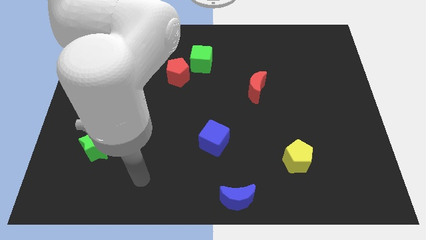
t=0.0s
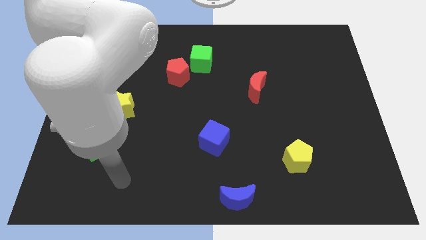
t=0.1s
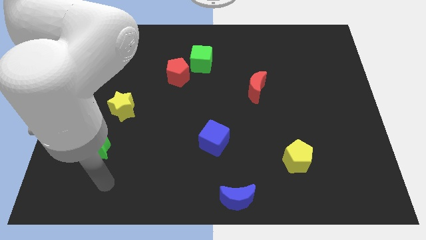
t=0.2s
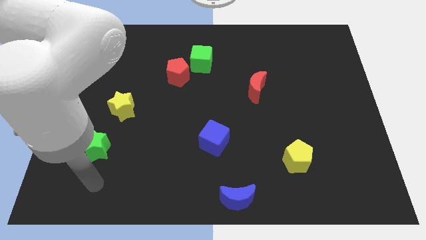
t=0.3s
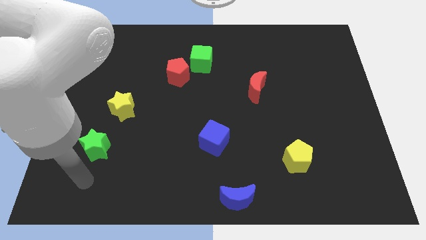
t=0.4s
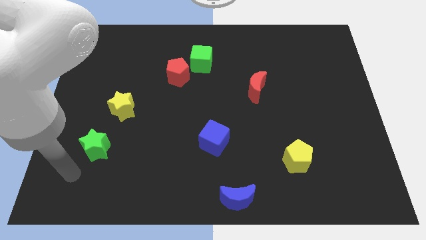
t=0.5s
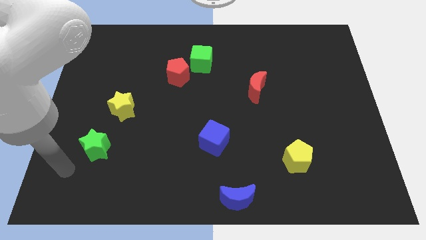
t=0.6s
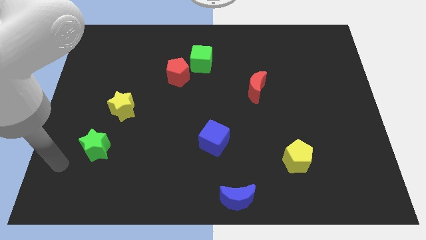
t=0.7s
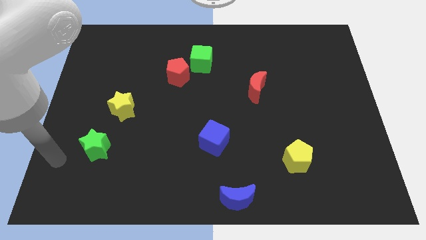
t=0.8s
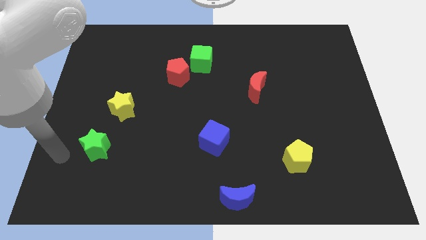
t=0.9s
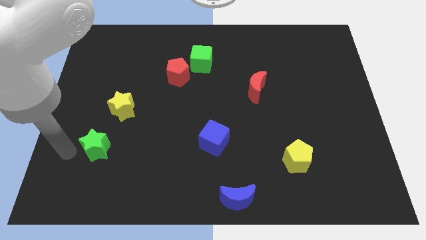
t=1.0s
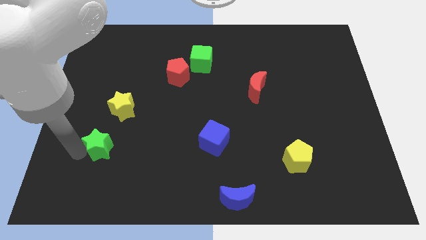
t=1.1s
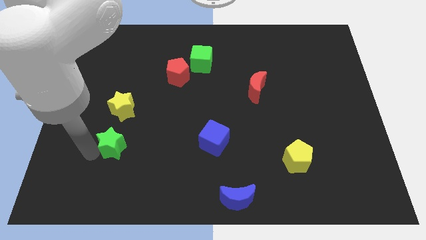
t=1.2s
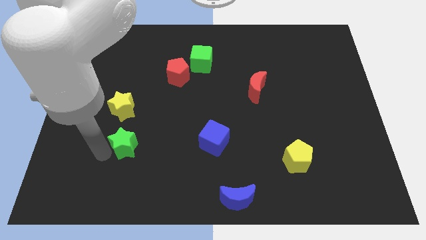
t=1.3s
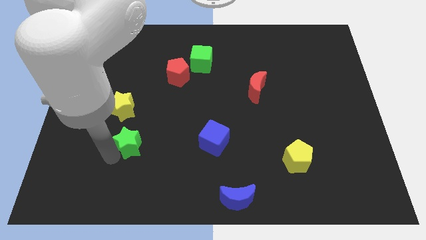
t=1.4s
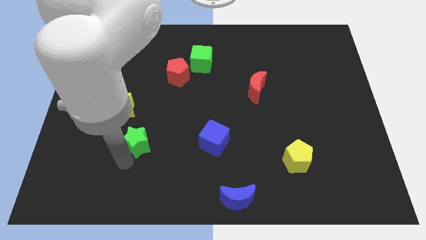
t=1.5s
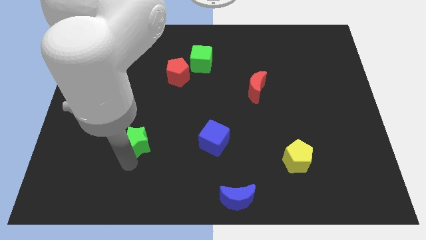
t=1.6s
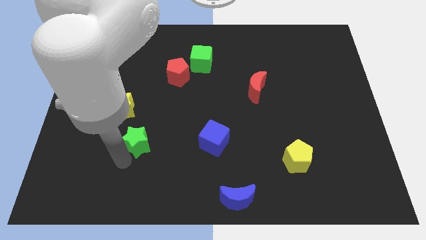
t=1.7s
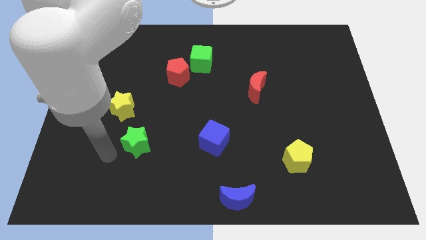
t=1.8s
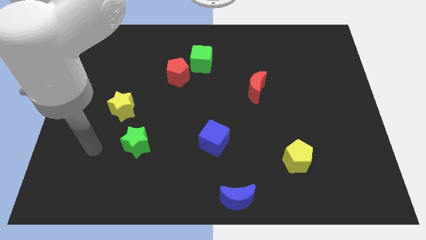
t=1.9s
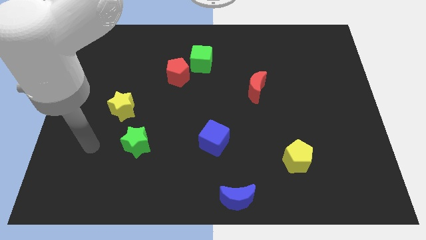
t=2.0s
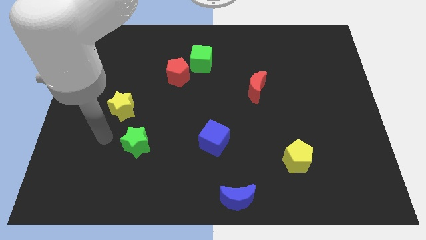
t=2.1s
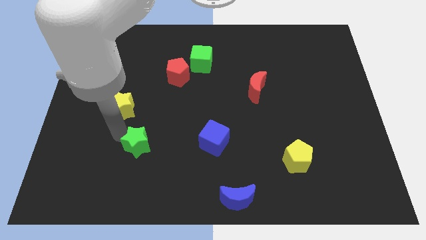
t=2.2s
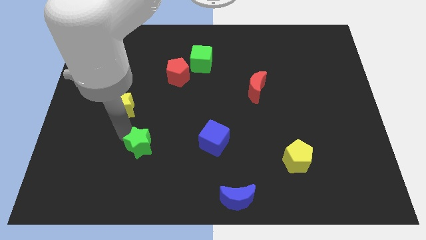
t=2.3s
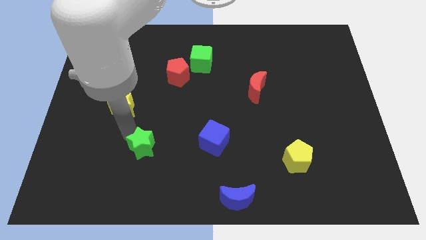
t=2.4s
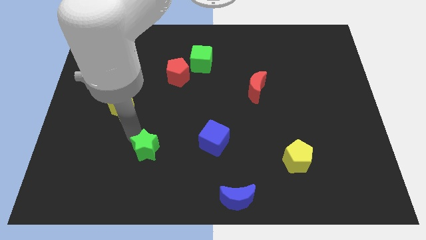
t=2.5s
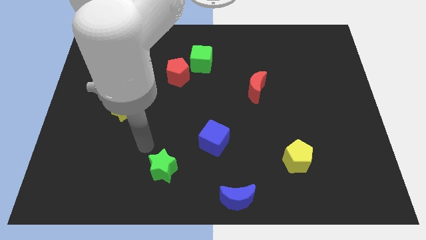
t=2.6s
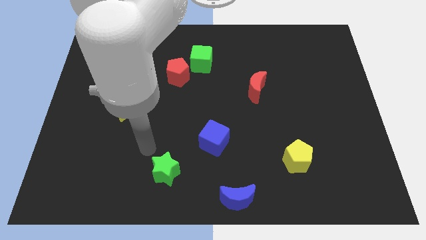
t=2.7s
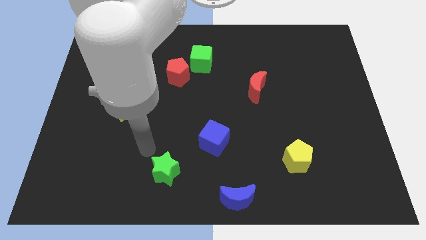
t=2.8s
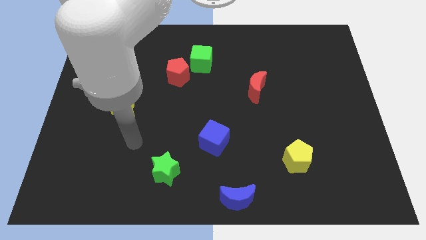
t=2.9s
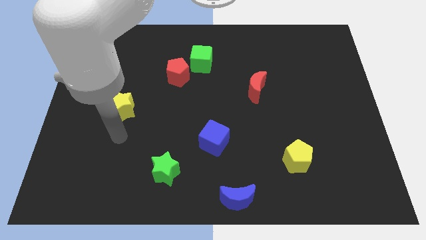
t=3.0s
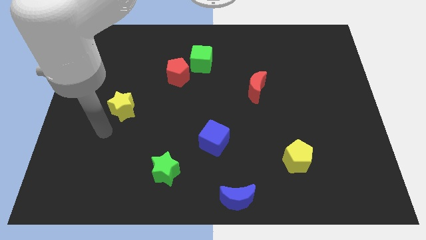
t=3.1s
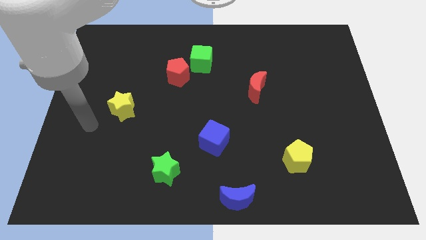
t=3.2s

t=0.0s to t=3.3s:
place green star to the bottom left of the blue cube

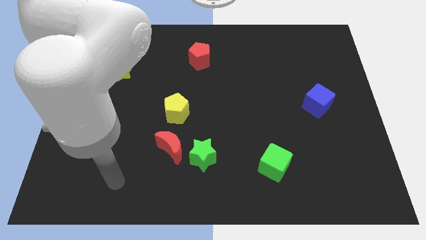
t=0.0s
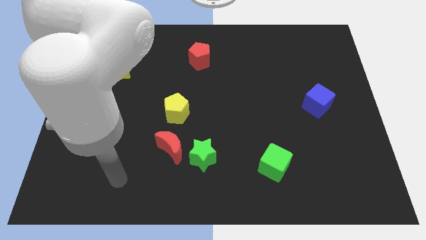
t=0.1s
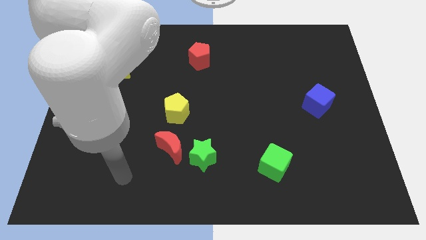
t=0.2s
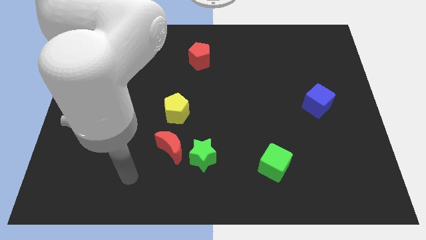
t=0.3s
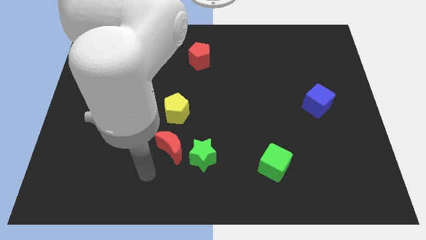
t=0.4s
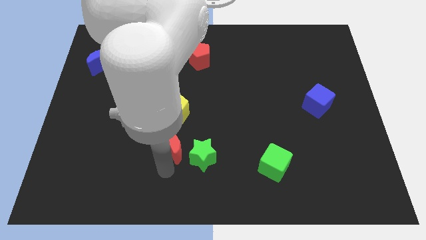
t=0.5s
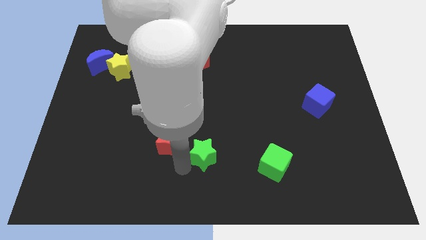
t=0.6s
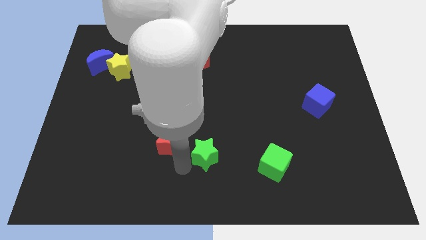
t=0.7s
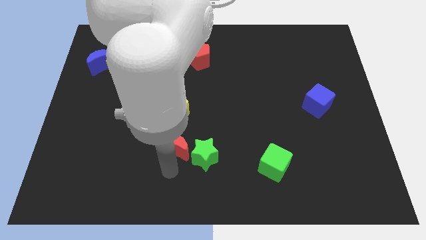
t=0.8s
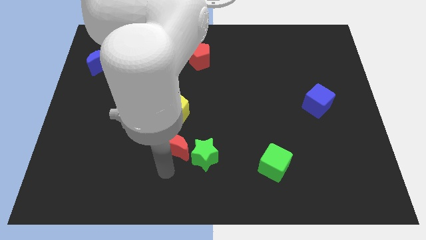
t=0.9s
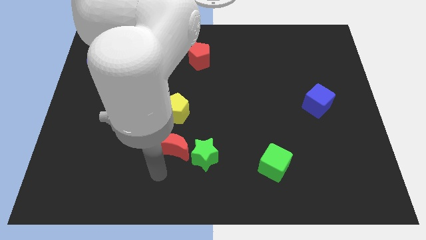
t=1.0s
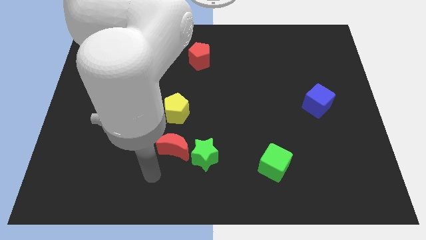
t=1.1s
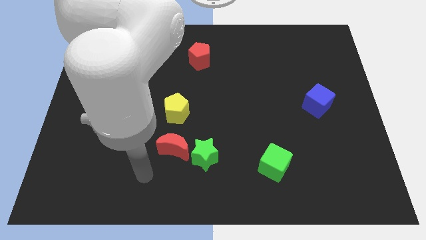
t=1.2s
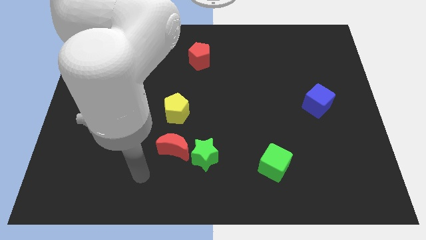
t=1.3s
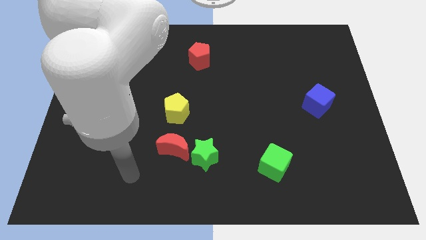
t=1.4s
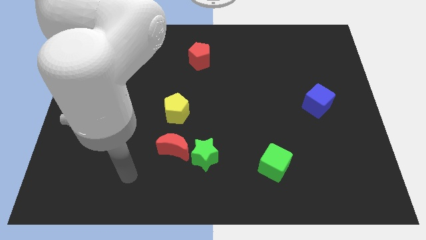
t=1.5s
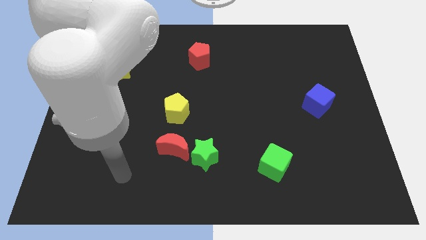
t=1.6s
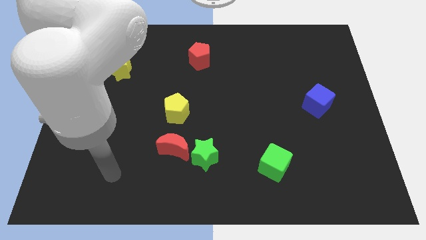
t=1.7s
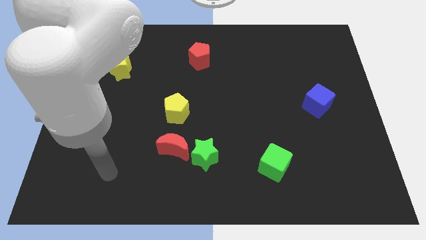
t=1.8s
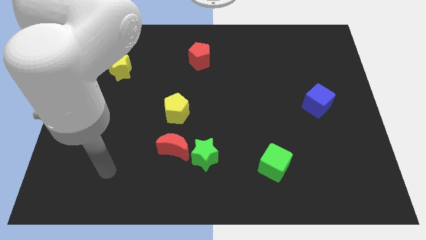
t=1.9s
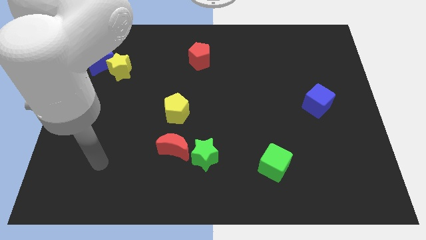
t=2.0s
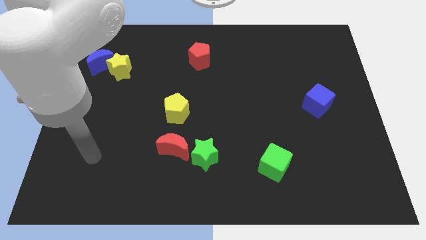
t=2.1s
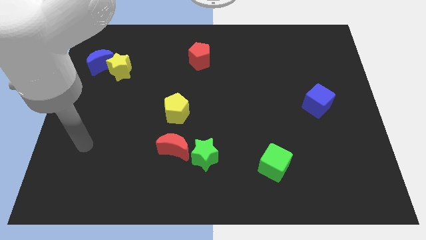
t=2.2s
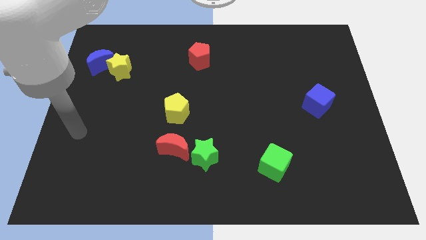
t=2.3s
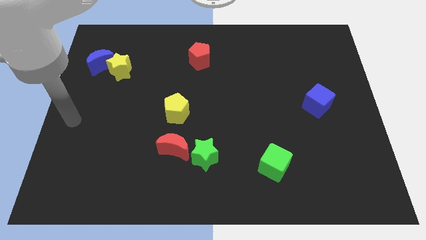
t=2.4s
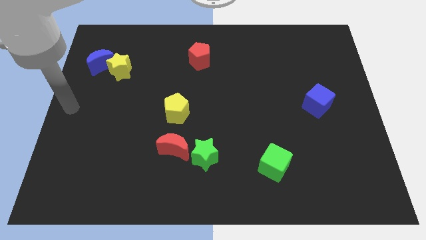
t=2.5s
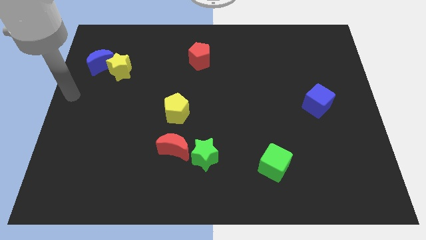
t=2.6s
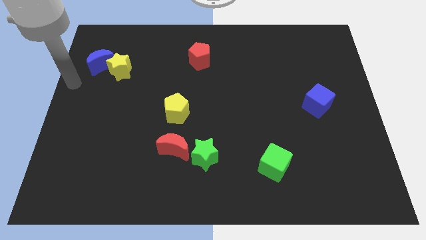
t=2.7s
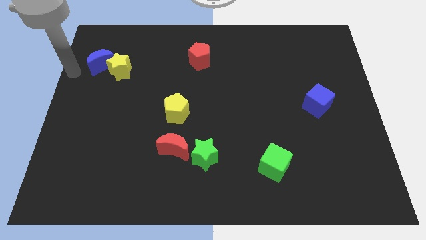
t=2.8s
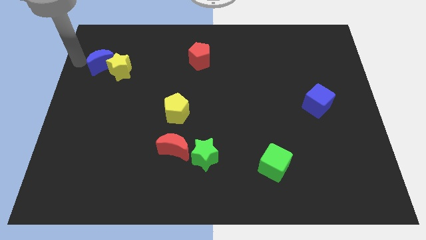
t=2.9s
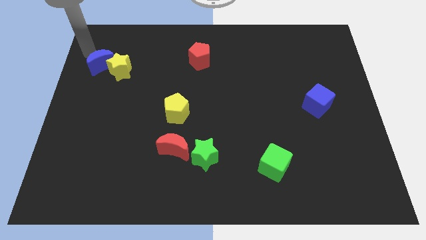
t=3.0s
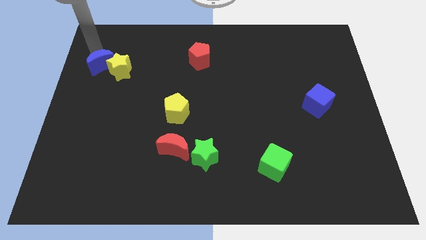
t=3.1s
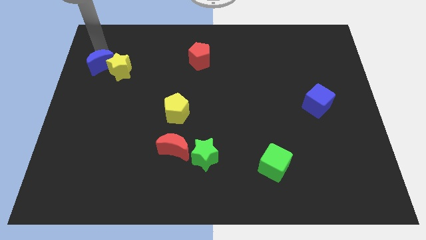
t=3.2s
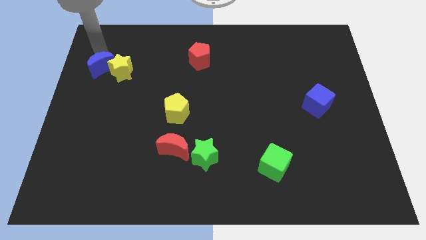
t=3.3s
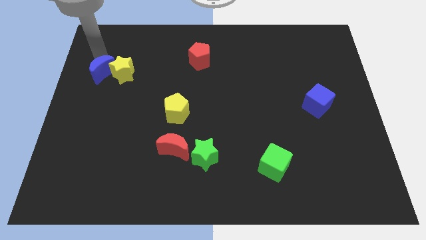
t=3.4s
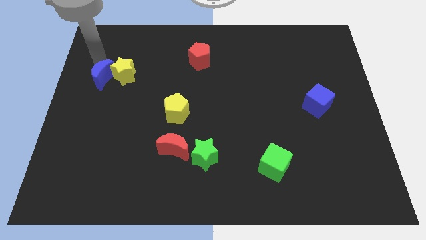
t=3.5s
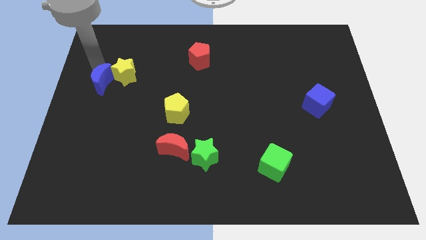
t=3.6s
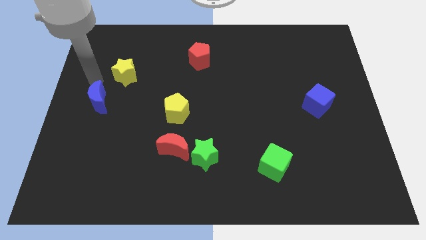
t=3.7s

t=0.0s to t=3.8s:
move your arm towards the green star on the bottom center of boarder

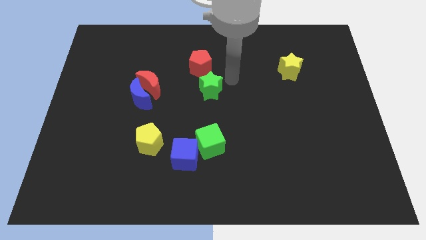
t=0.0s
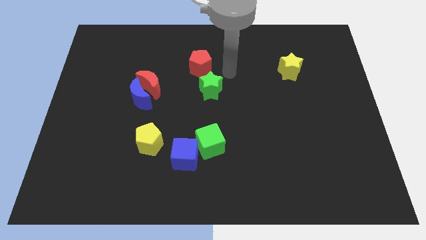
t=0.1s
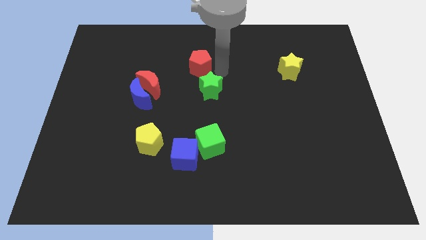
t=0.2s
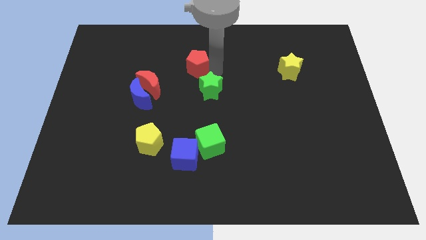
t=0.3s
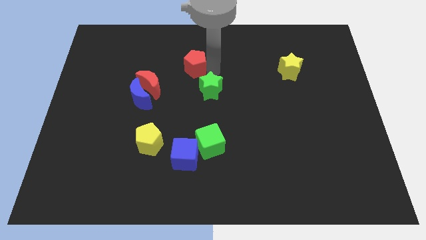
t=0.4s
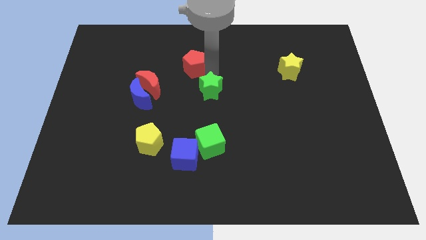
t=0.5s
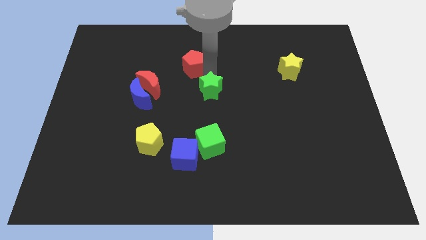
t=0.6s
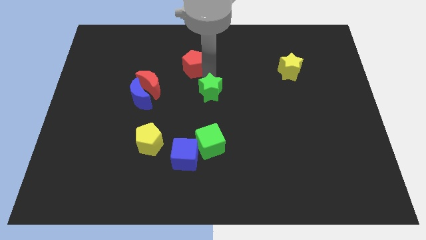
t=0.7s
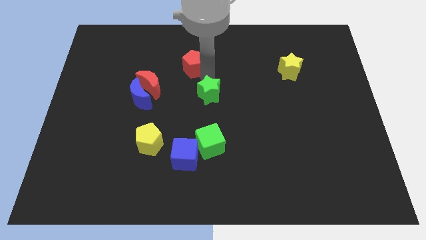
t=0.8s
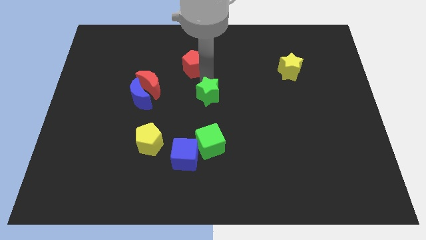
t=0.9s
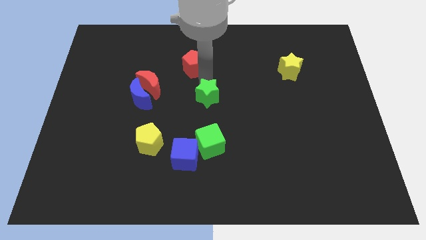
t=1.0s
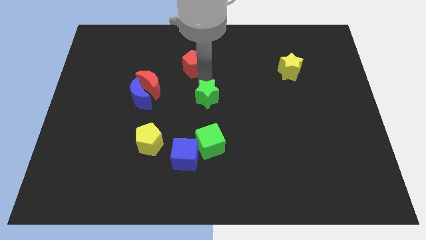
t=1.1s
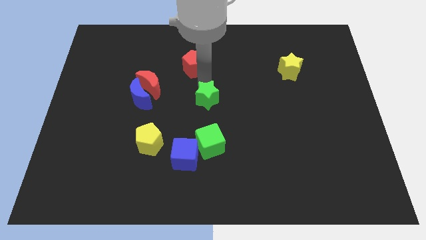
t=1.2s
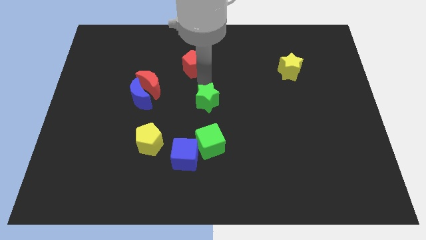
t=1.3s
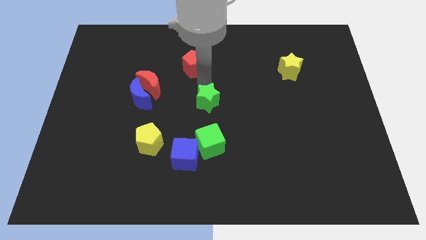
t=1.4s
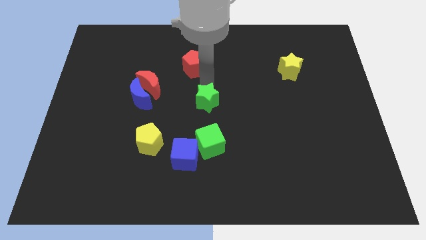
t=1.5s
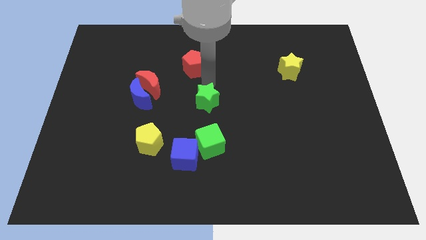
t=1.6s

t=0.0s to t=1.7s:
separate the red pentagon and green star
